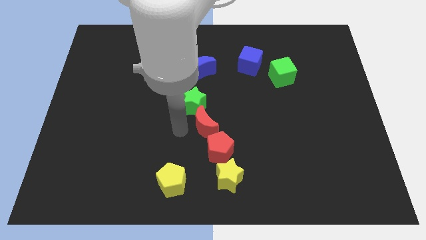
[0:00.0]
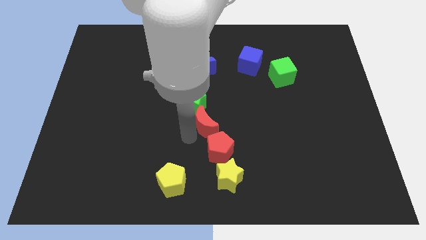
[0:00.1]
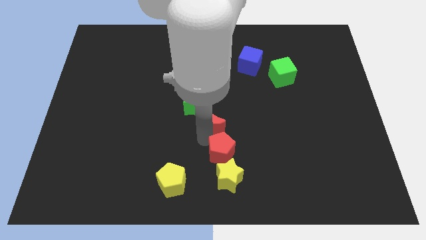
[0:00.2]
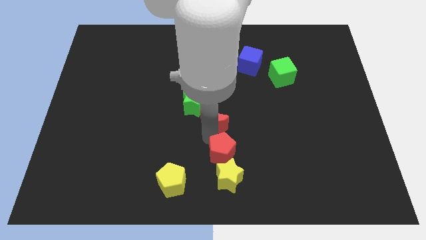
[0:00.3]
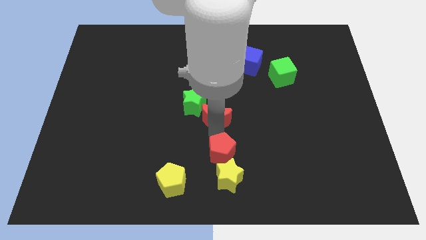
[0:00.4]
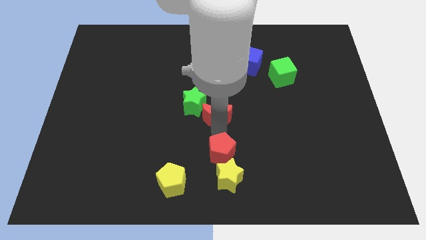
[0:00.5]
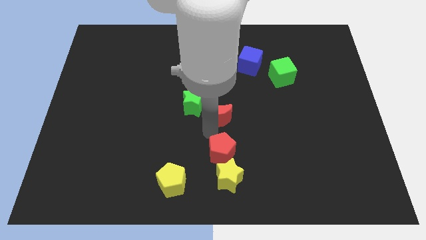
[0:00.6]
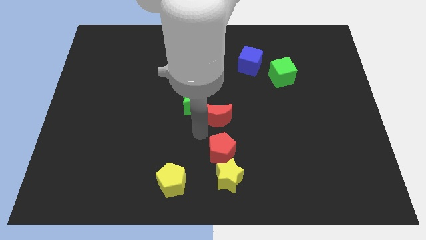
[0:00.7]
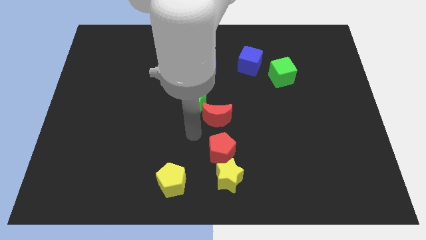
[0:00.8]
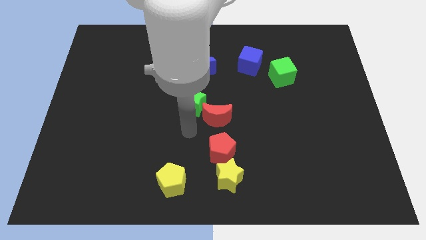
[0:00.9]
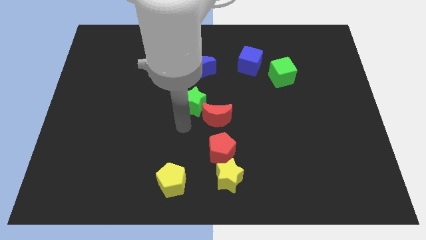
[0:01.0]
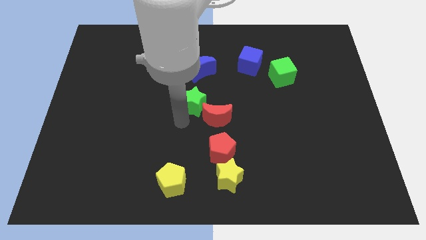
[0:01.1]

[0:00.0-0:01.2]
push red crescent into the green star

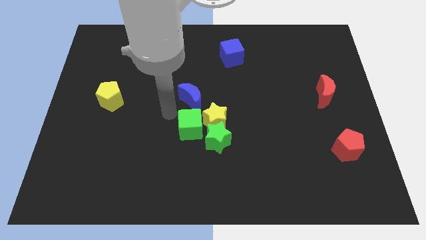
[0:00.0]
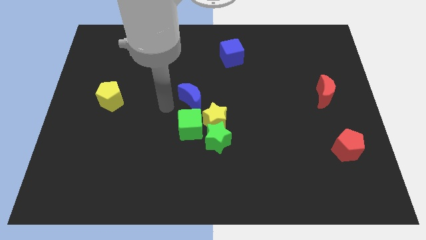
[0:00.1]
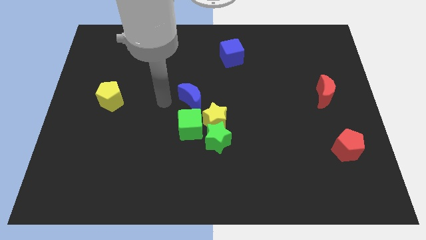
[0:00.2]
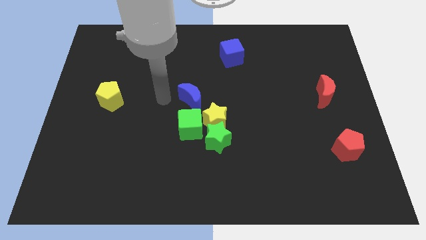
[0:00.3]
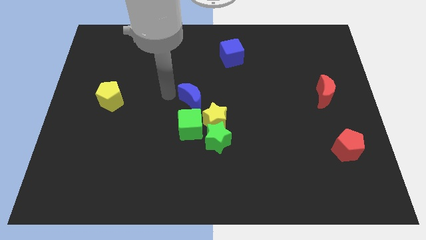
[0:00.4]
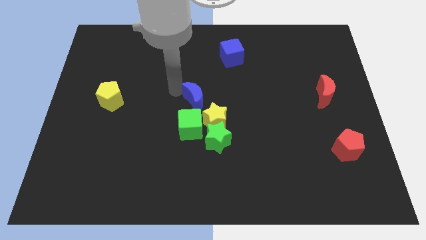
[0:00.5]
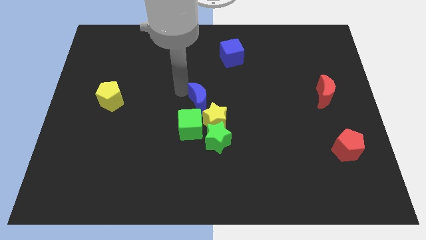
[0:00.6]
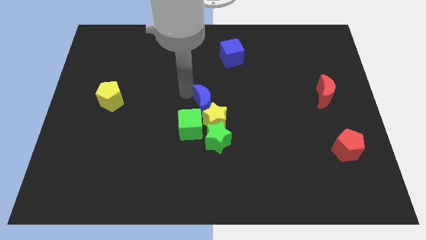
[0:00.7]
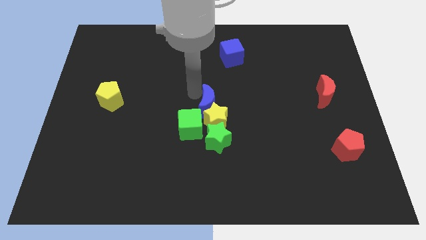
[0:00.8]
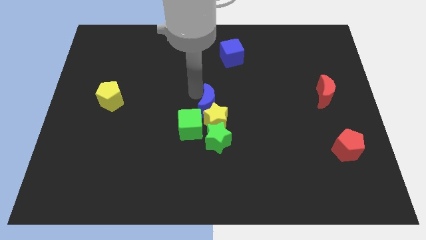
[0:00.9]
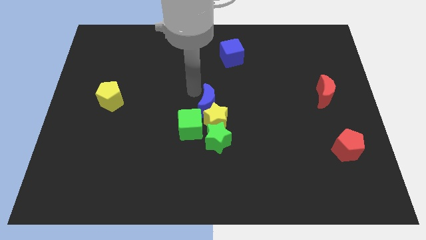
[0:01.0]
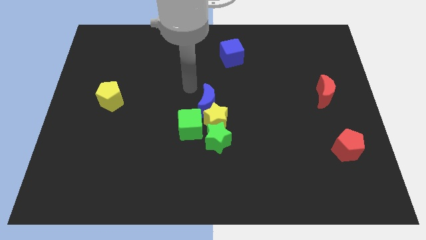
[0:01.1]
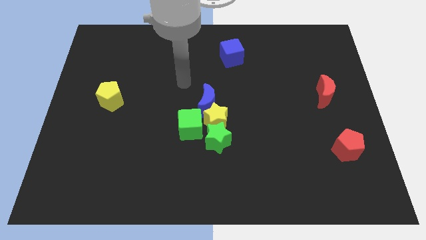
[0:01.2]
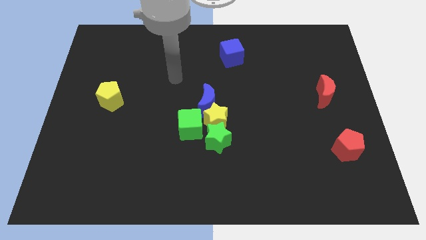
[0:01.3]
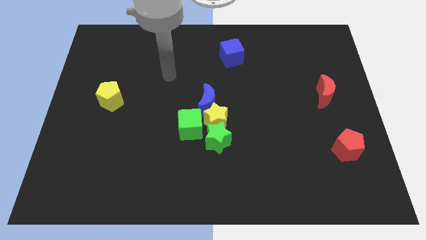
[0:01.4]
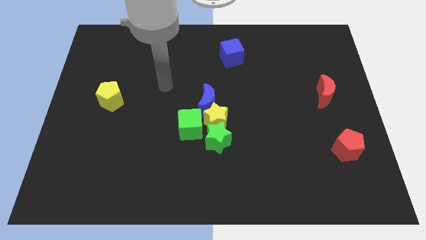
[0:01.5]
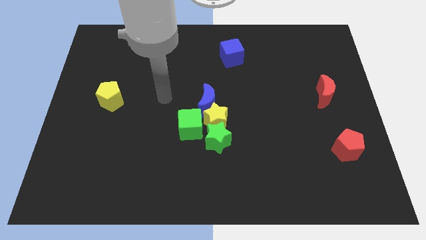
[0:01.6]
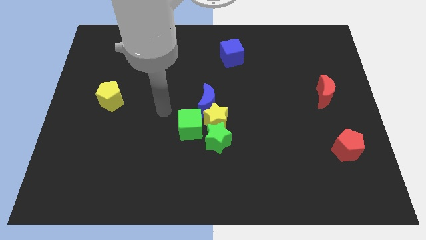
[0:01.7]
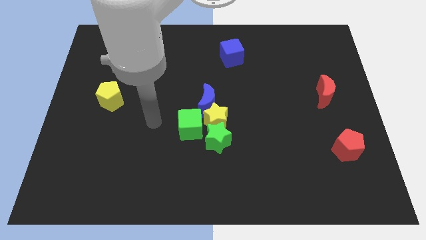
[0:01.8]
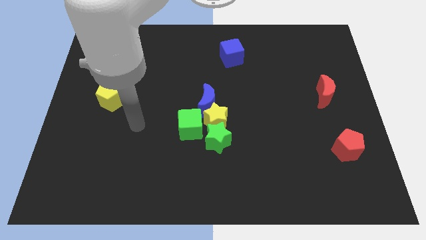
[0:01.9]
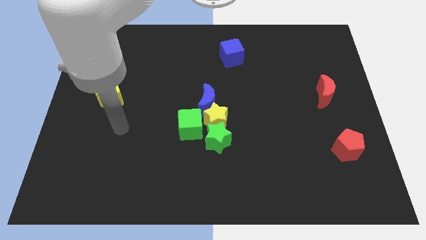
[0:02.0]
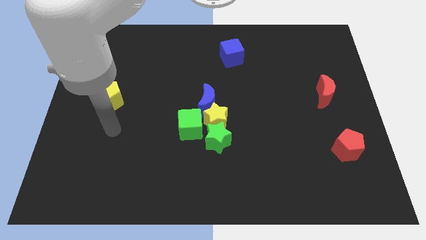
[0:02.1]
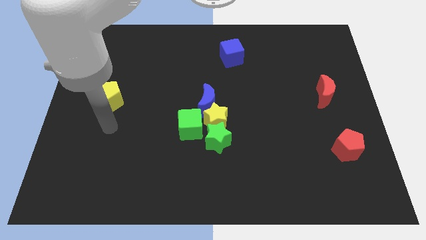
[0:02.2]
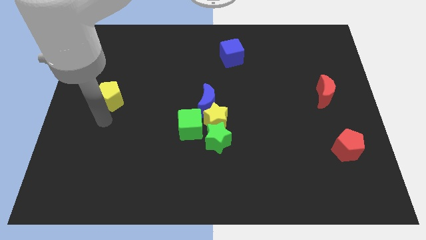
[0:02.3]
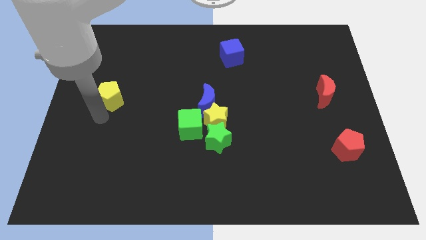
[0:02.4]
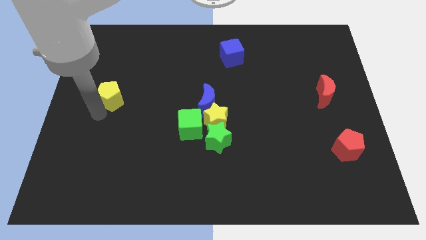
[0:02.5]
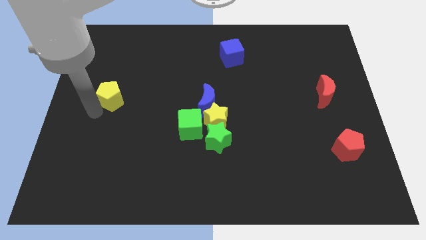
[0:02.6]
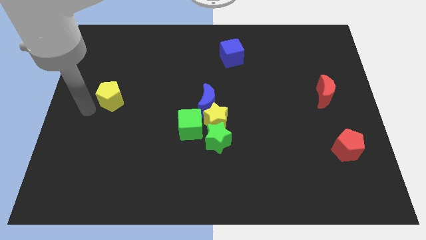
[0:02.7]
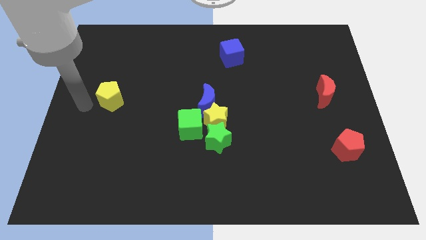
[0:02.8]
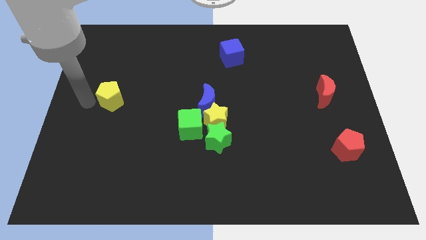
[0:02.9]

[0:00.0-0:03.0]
place the blue crescent above the yellow star

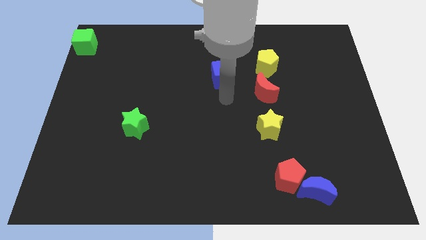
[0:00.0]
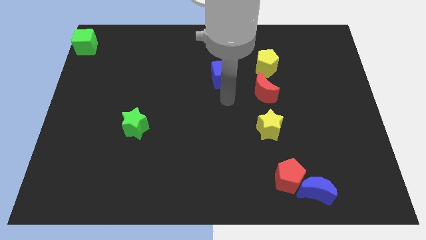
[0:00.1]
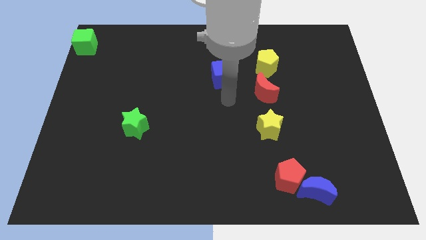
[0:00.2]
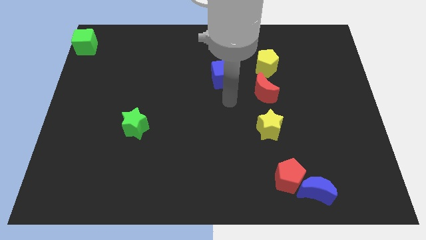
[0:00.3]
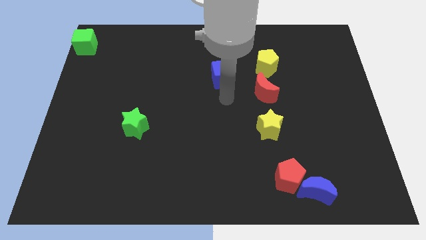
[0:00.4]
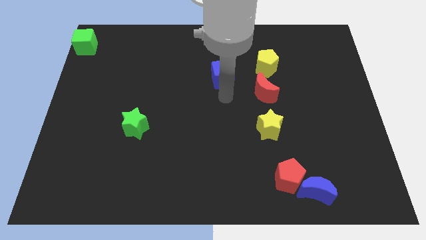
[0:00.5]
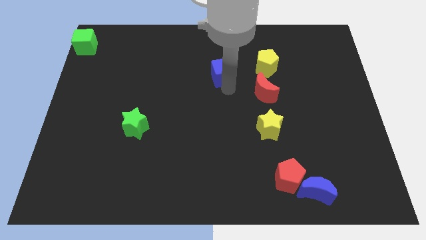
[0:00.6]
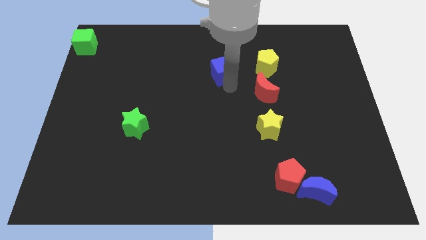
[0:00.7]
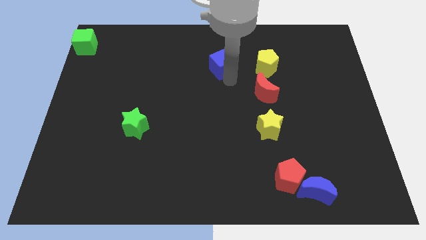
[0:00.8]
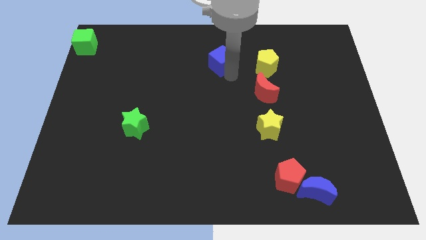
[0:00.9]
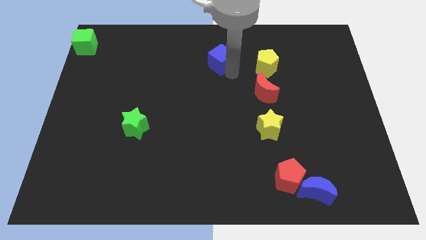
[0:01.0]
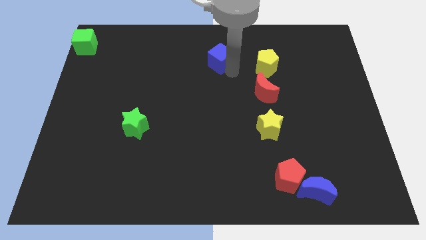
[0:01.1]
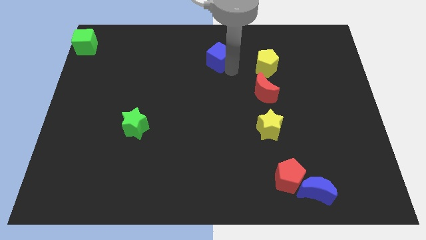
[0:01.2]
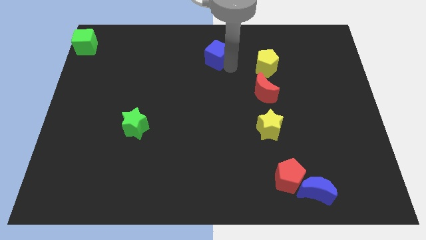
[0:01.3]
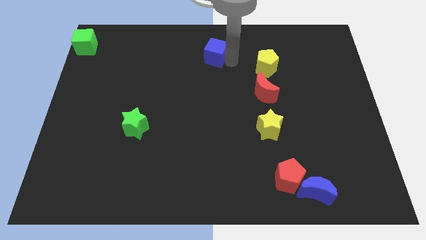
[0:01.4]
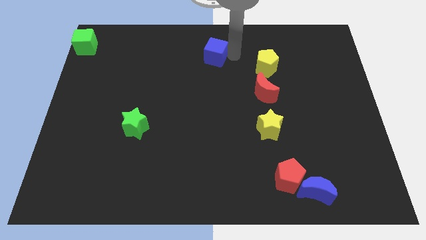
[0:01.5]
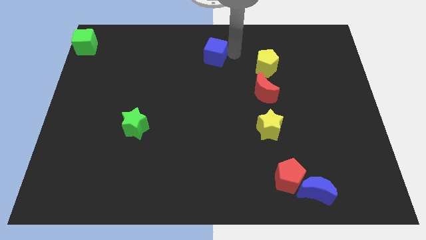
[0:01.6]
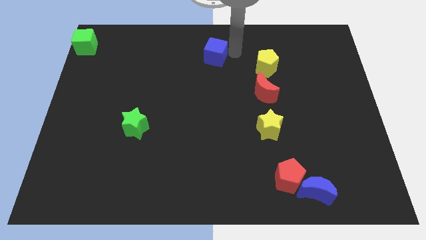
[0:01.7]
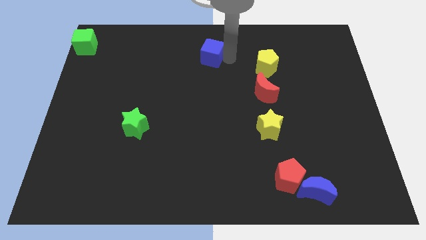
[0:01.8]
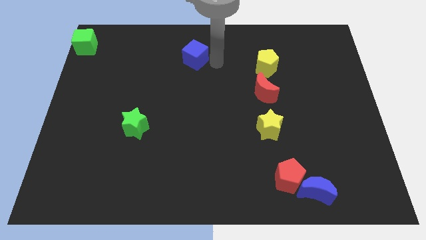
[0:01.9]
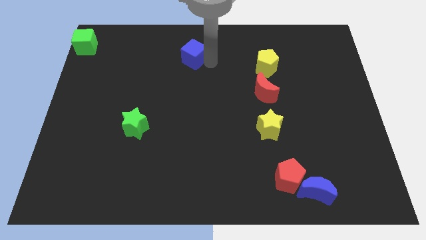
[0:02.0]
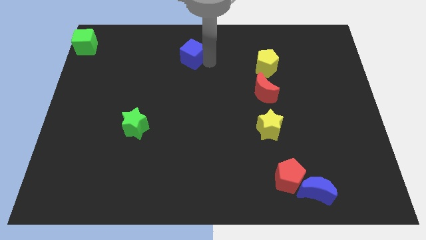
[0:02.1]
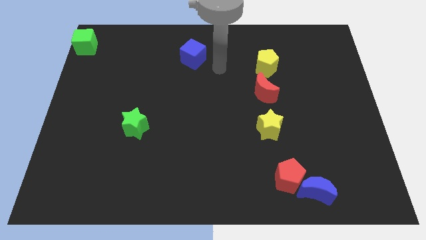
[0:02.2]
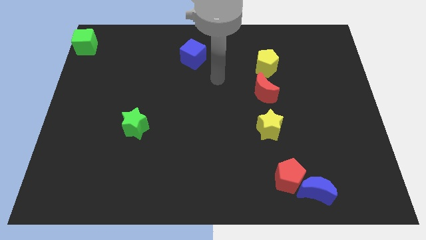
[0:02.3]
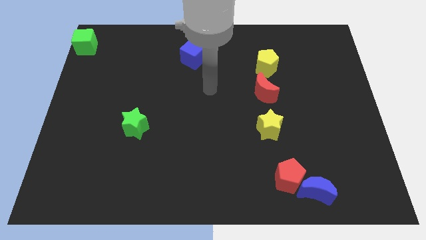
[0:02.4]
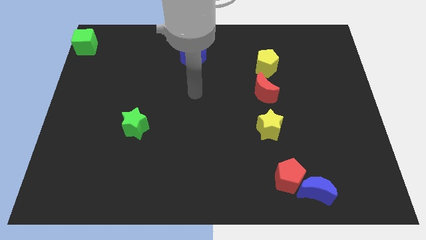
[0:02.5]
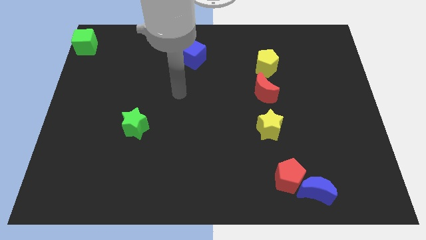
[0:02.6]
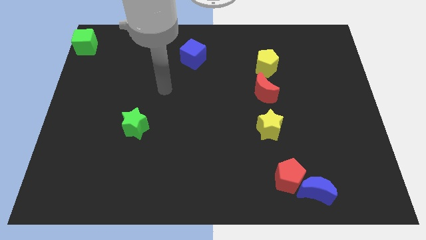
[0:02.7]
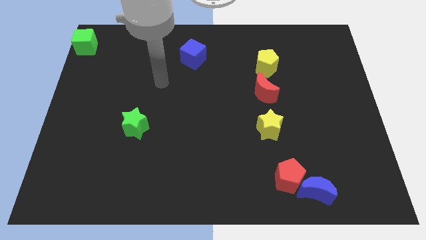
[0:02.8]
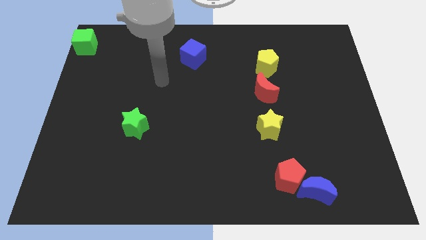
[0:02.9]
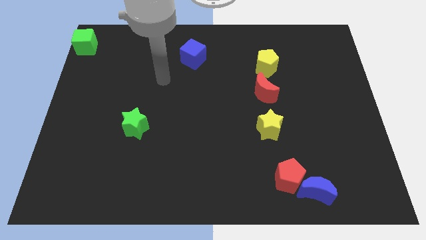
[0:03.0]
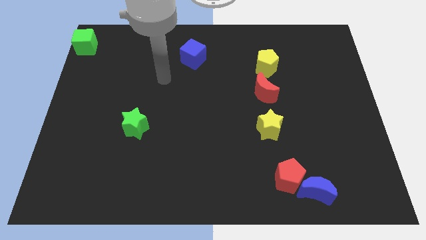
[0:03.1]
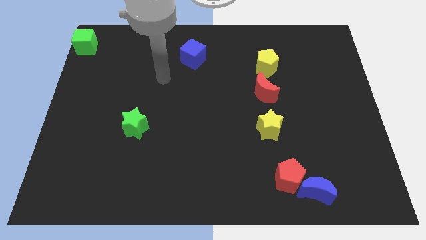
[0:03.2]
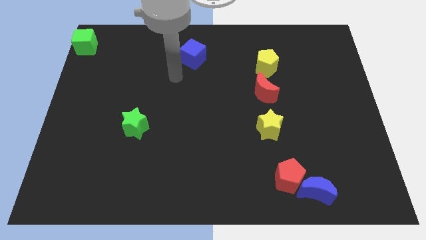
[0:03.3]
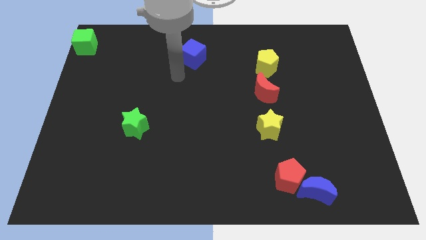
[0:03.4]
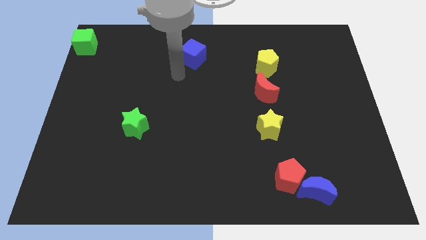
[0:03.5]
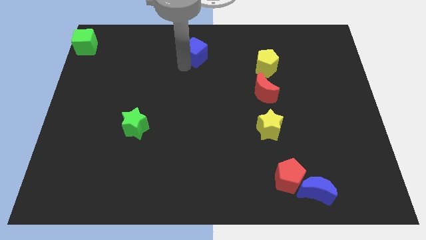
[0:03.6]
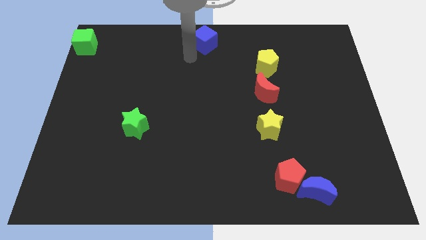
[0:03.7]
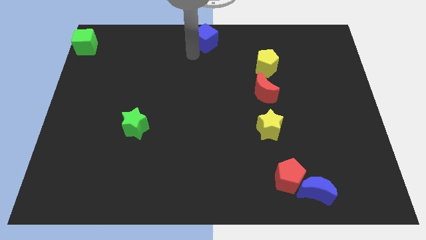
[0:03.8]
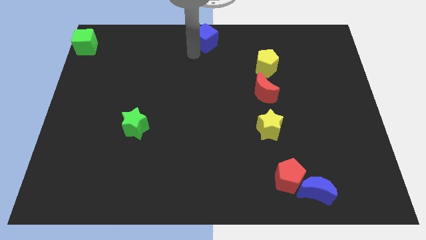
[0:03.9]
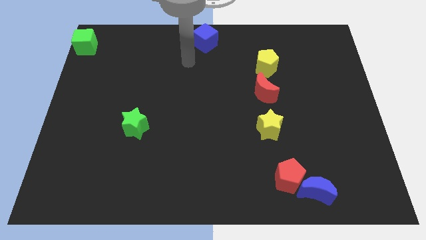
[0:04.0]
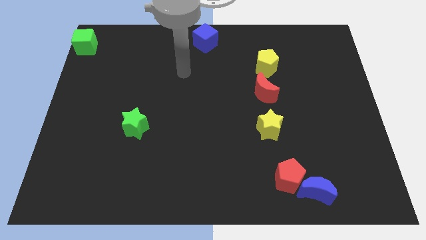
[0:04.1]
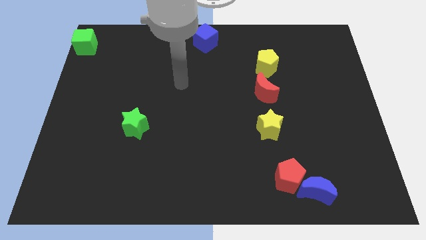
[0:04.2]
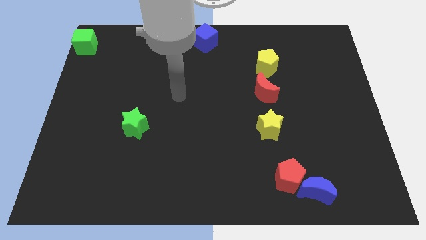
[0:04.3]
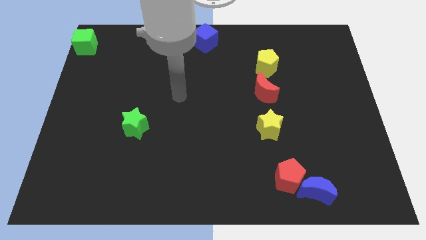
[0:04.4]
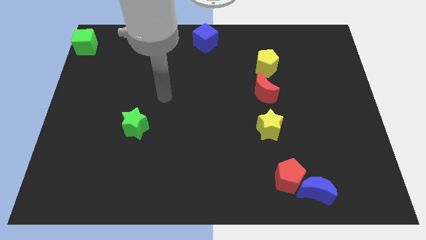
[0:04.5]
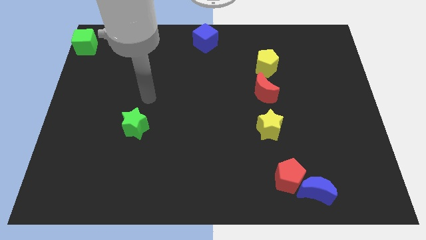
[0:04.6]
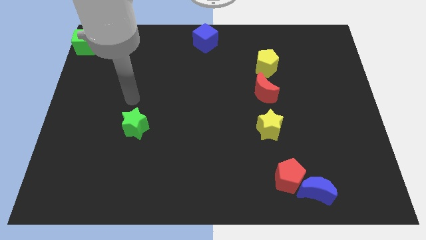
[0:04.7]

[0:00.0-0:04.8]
place the blue cube at the top center of the board

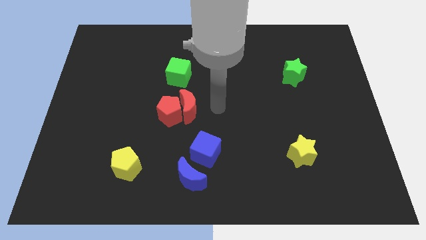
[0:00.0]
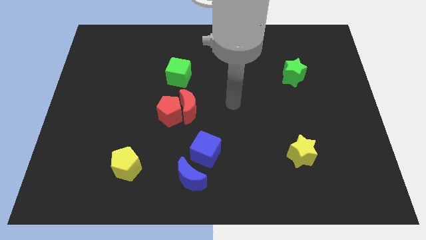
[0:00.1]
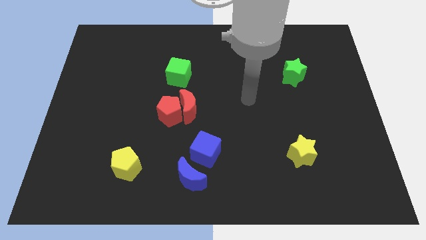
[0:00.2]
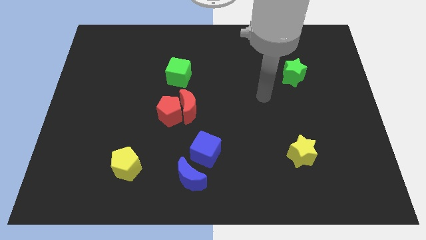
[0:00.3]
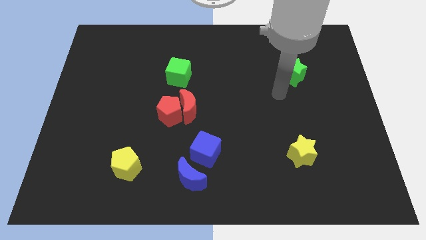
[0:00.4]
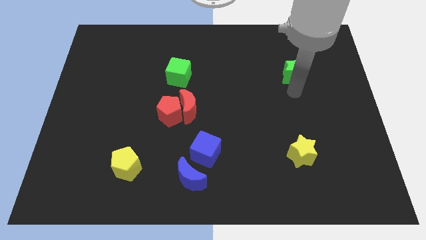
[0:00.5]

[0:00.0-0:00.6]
point your arm below the green star
